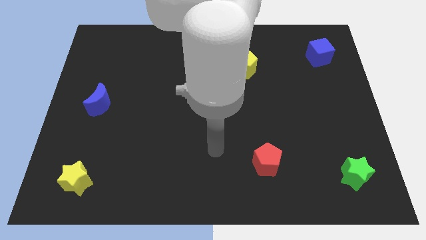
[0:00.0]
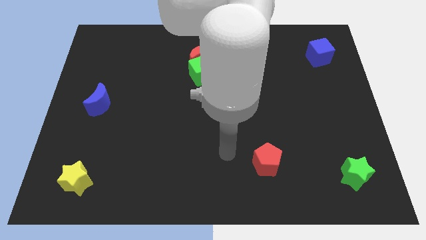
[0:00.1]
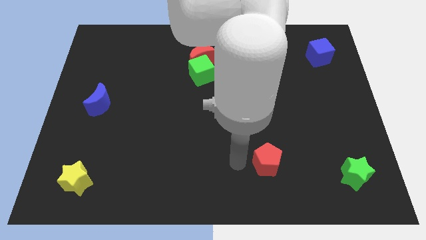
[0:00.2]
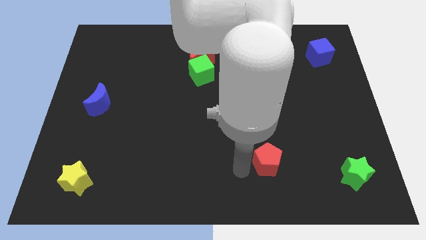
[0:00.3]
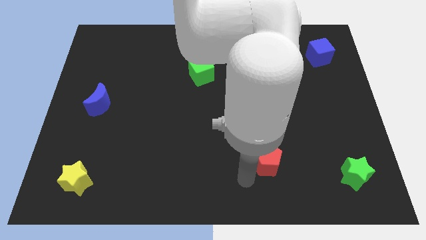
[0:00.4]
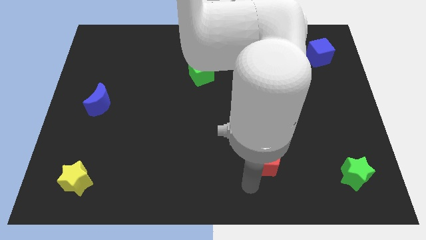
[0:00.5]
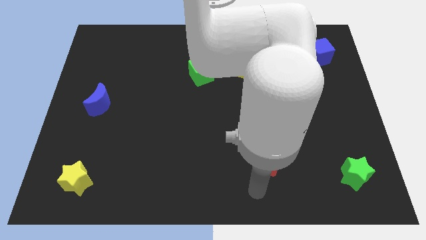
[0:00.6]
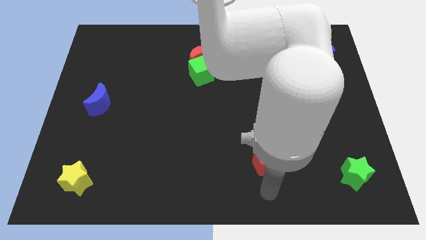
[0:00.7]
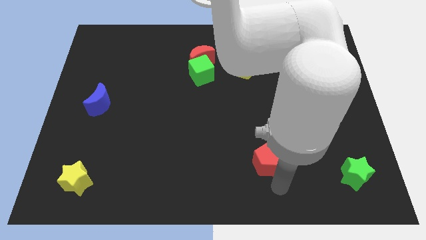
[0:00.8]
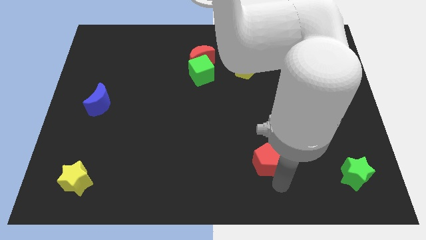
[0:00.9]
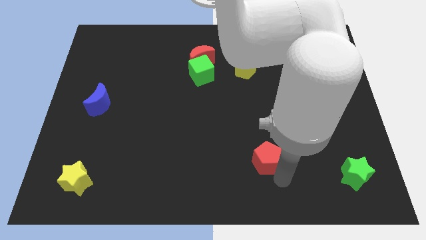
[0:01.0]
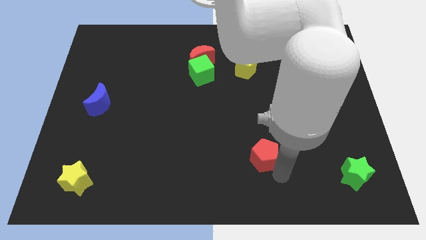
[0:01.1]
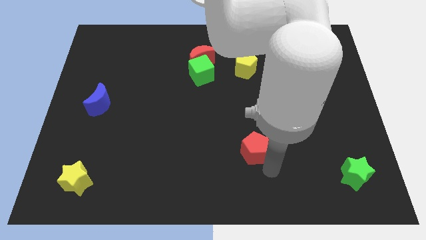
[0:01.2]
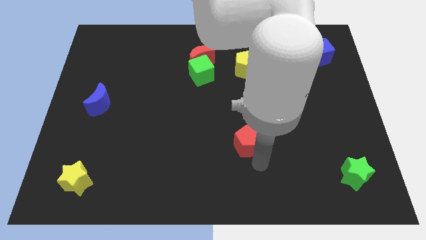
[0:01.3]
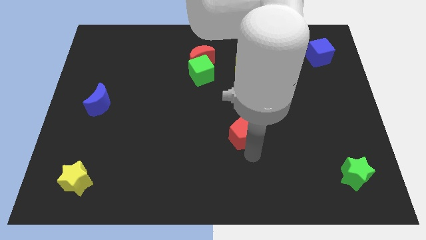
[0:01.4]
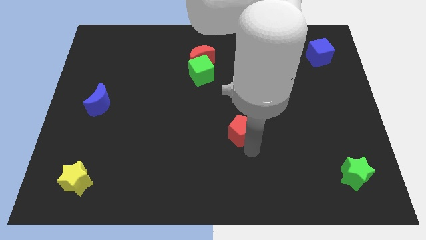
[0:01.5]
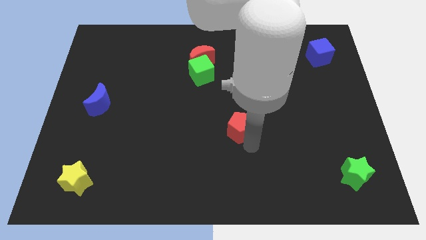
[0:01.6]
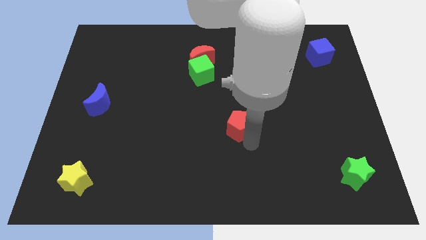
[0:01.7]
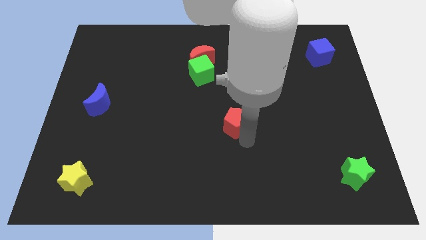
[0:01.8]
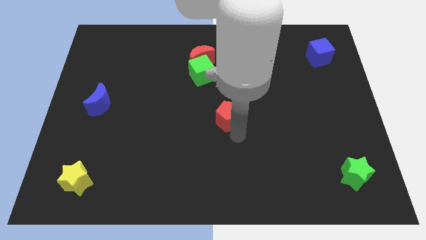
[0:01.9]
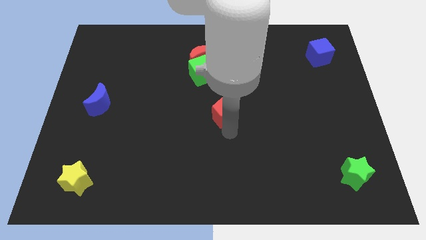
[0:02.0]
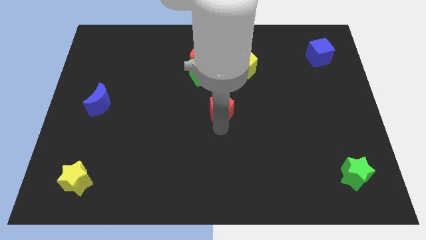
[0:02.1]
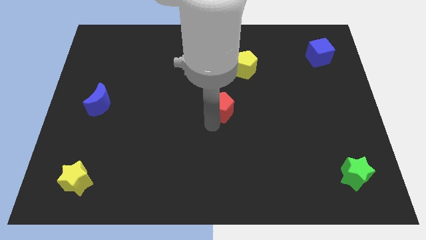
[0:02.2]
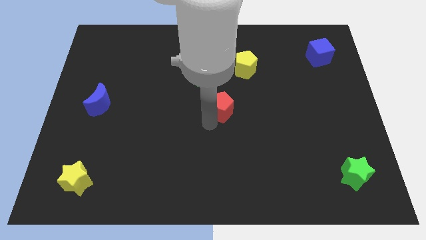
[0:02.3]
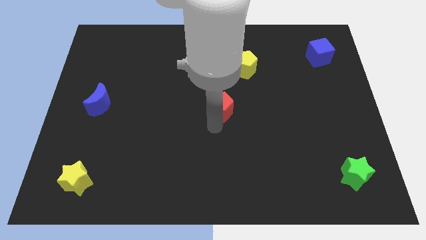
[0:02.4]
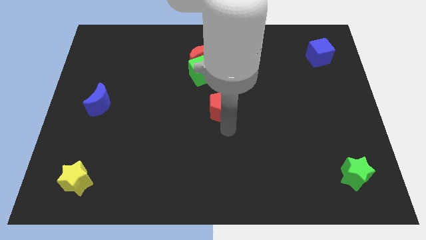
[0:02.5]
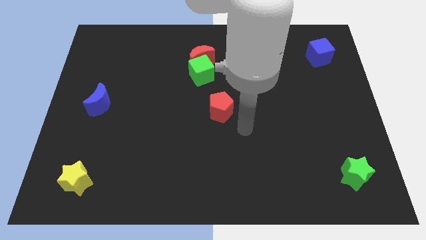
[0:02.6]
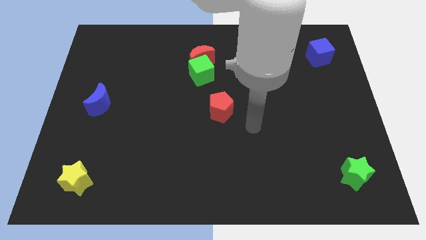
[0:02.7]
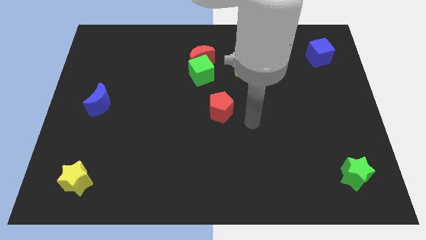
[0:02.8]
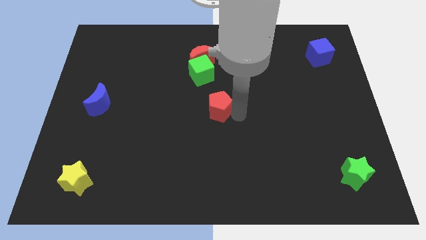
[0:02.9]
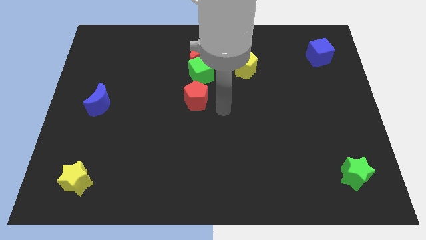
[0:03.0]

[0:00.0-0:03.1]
move red pentagon to the center

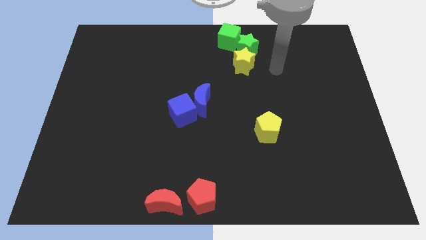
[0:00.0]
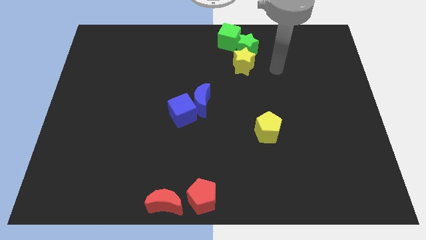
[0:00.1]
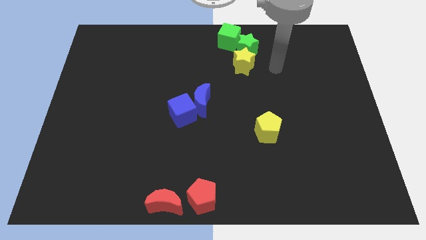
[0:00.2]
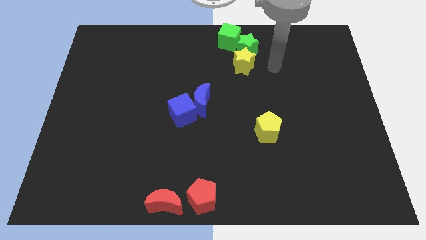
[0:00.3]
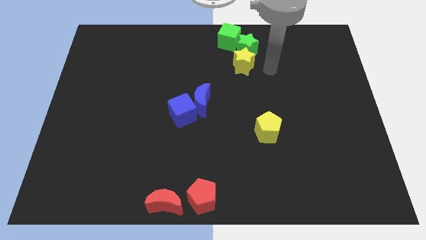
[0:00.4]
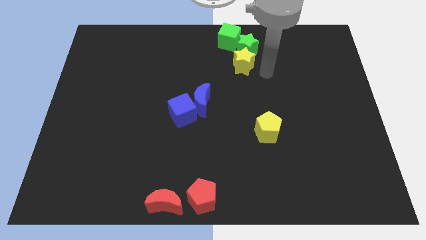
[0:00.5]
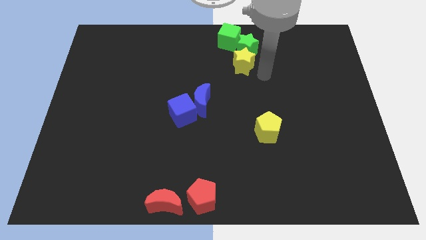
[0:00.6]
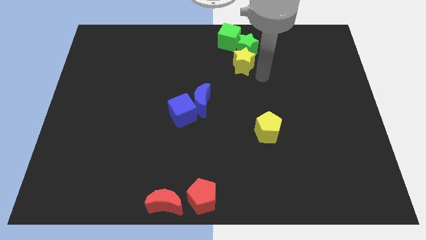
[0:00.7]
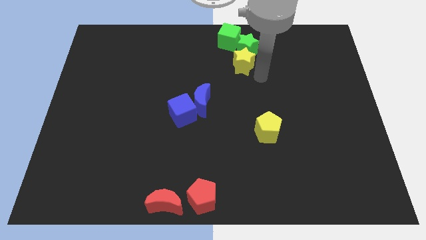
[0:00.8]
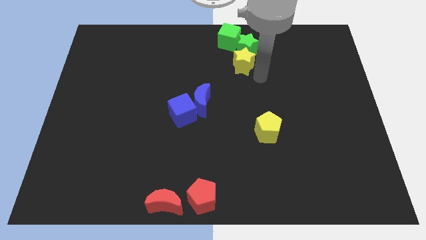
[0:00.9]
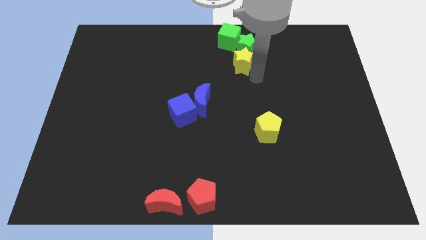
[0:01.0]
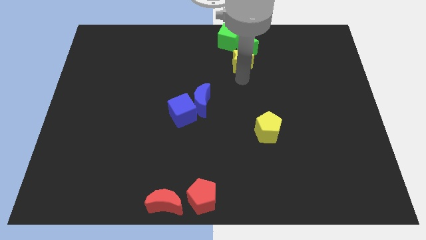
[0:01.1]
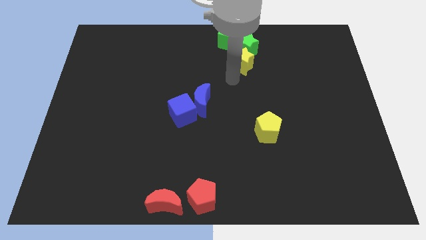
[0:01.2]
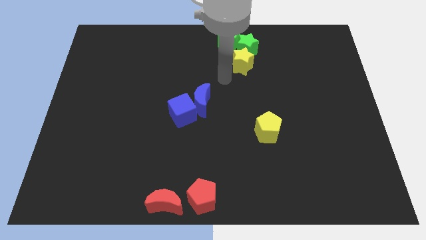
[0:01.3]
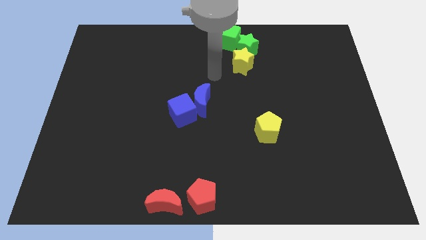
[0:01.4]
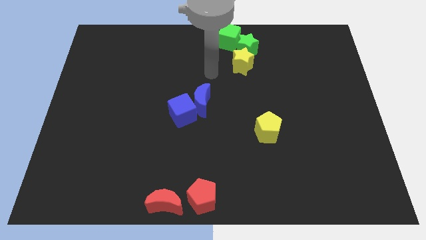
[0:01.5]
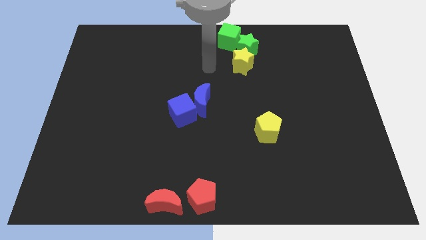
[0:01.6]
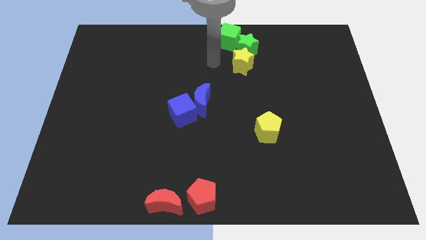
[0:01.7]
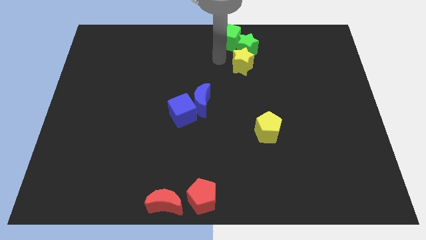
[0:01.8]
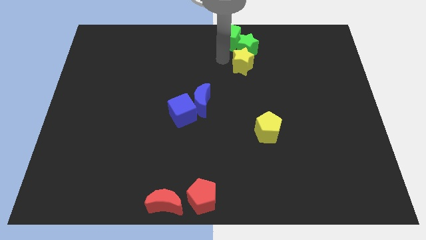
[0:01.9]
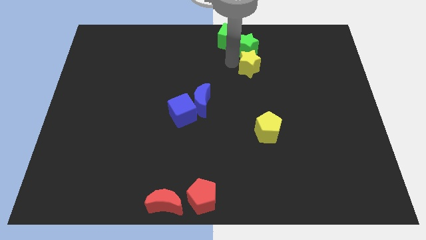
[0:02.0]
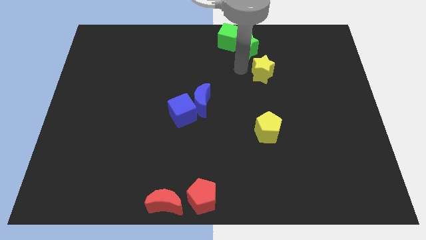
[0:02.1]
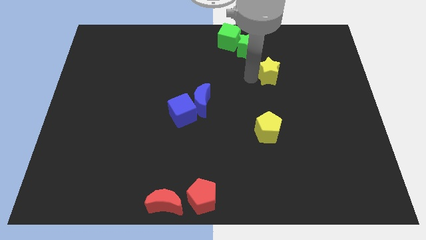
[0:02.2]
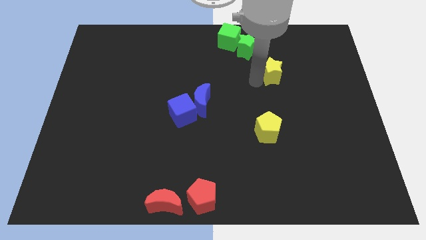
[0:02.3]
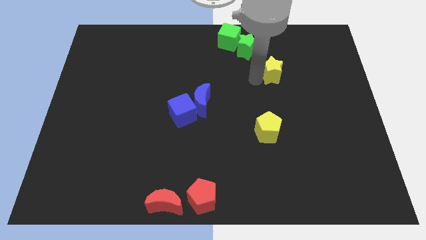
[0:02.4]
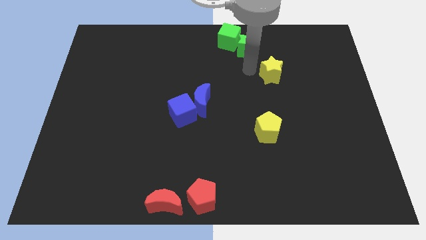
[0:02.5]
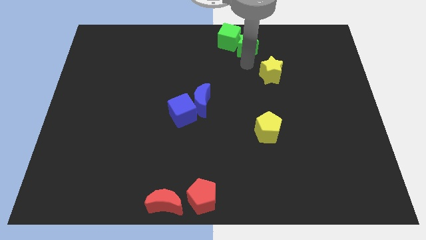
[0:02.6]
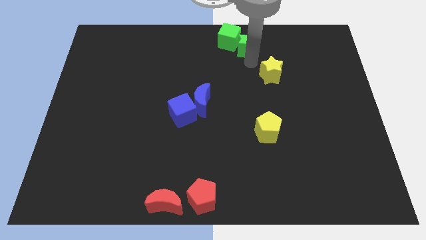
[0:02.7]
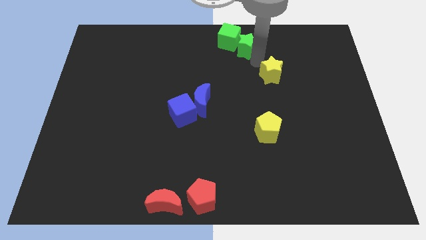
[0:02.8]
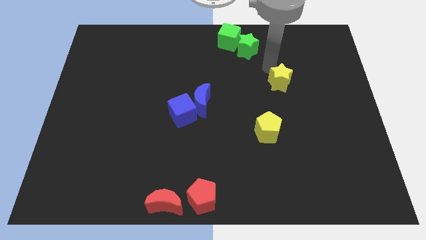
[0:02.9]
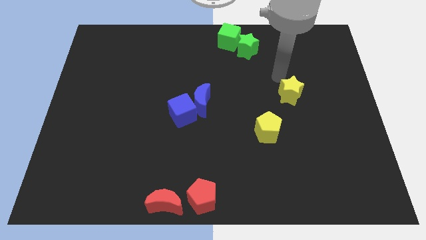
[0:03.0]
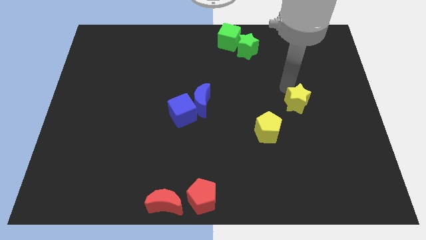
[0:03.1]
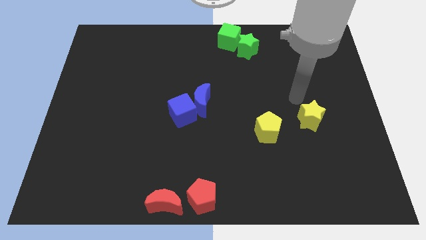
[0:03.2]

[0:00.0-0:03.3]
separate the yellow star from green star towards the right

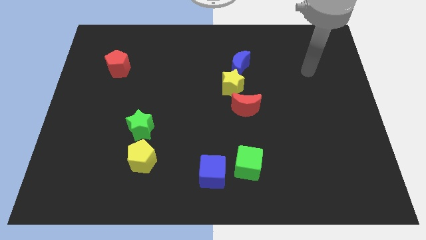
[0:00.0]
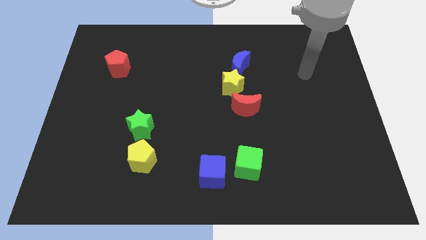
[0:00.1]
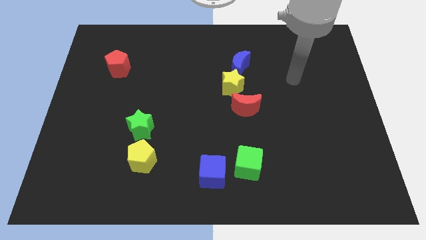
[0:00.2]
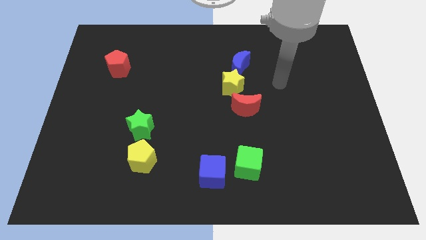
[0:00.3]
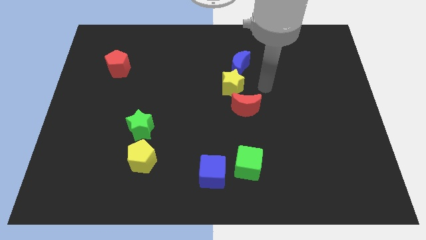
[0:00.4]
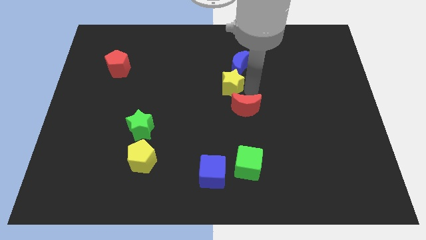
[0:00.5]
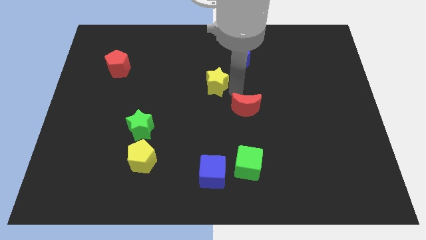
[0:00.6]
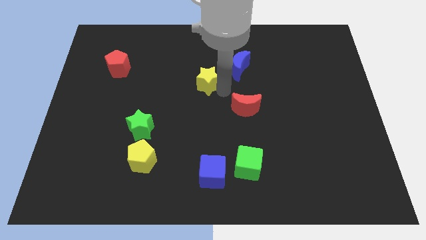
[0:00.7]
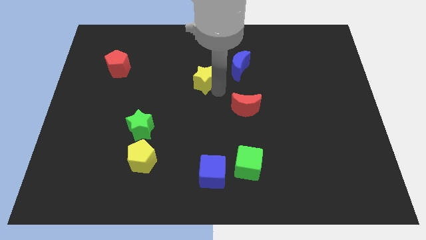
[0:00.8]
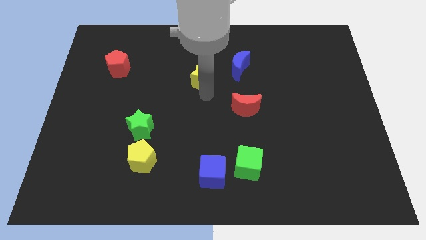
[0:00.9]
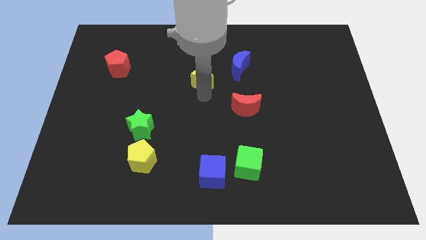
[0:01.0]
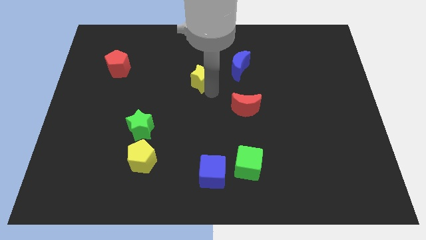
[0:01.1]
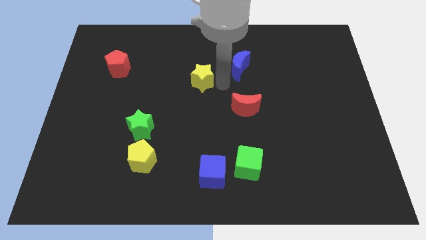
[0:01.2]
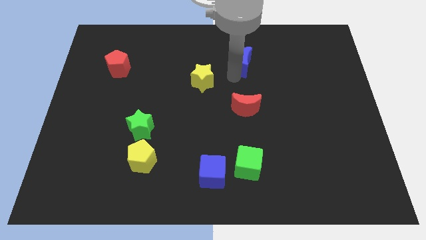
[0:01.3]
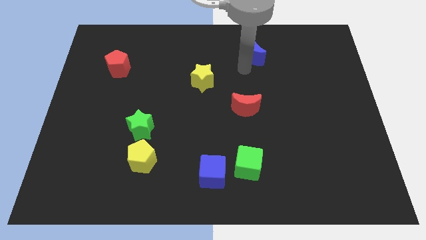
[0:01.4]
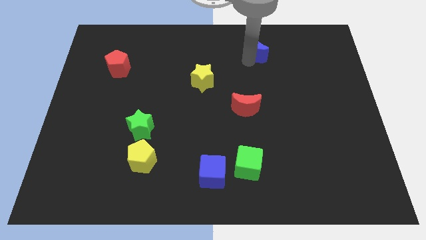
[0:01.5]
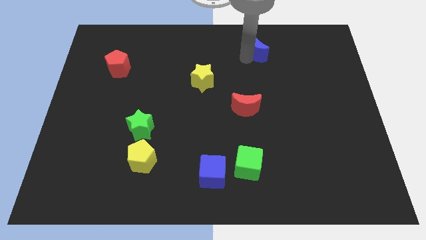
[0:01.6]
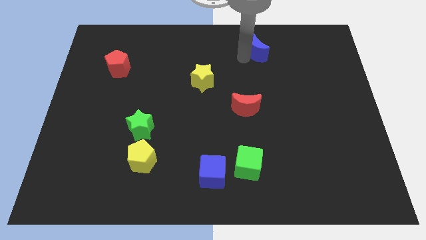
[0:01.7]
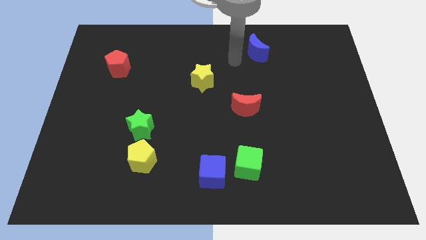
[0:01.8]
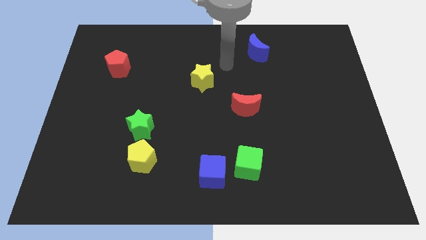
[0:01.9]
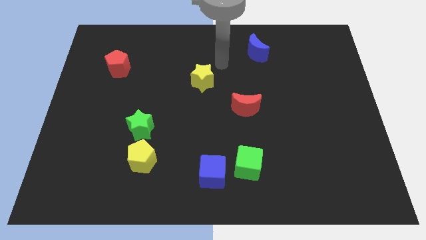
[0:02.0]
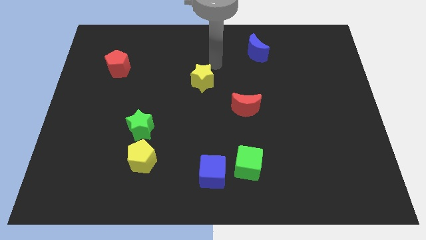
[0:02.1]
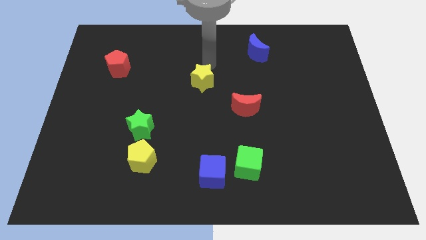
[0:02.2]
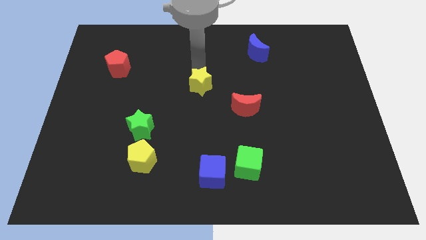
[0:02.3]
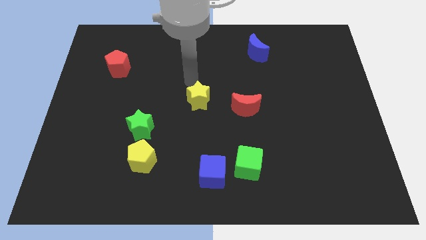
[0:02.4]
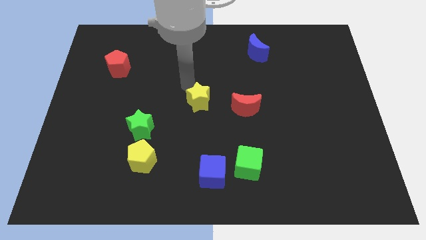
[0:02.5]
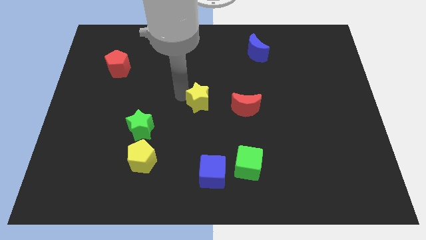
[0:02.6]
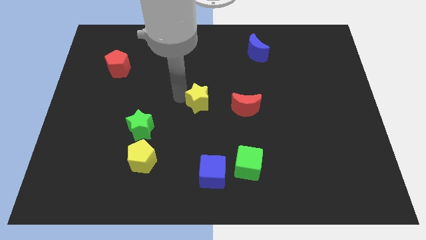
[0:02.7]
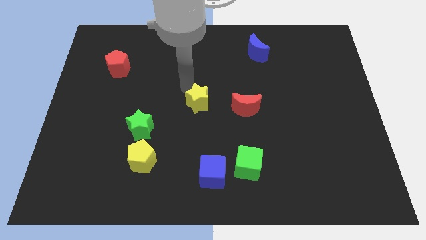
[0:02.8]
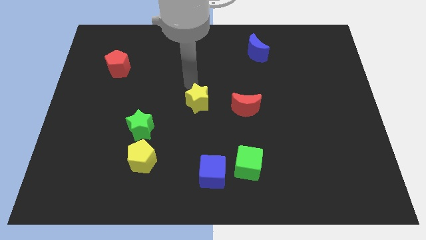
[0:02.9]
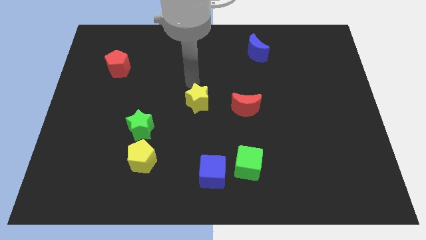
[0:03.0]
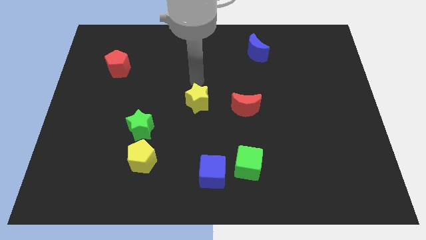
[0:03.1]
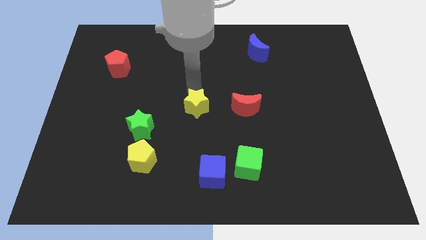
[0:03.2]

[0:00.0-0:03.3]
move the yellow star and blue moon diagonal to each other
